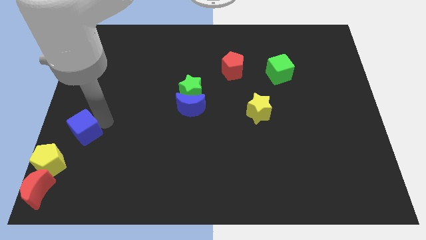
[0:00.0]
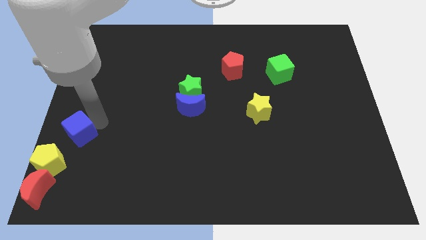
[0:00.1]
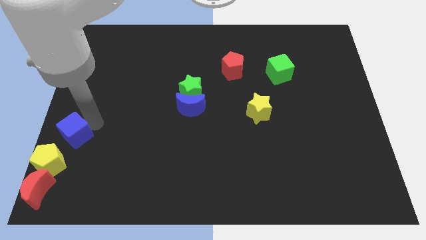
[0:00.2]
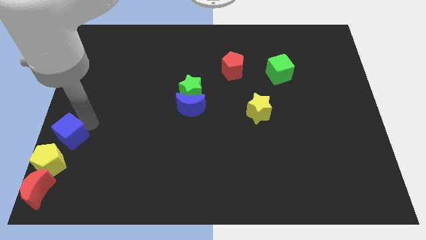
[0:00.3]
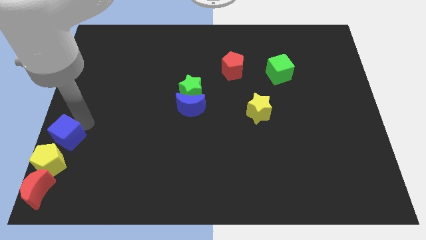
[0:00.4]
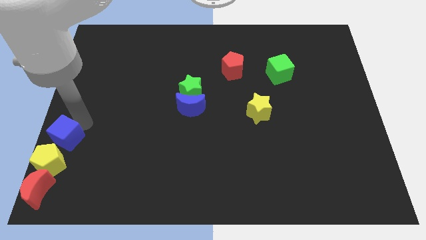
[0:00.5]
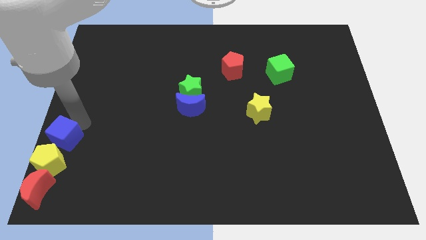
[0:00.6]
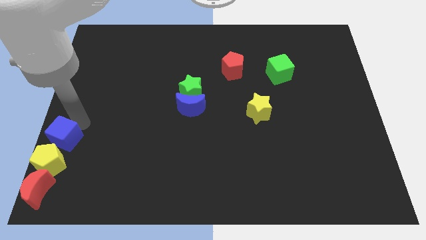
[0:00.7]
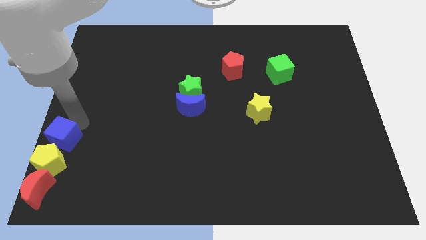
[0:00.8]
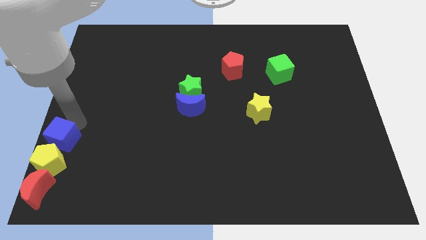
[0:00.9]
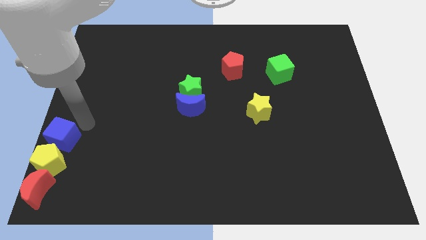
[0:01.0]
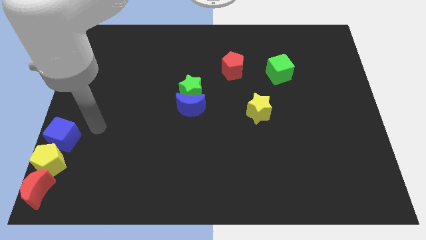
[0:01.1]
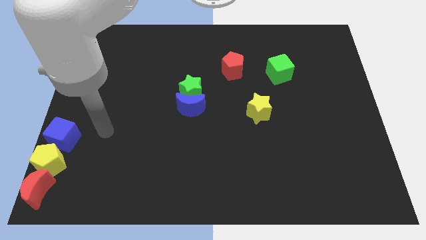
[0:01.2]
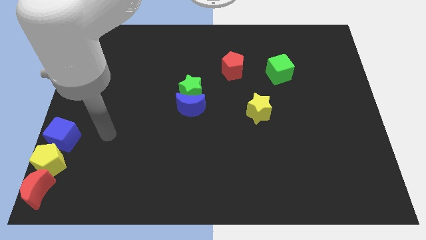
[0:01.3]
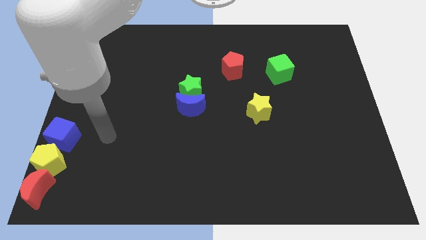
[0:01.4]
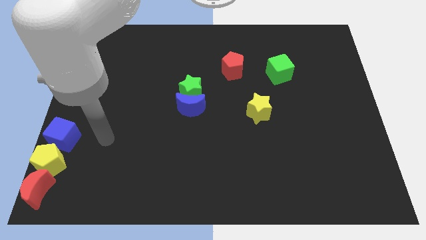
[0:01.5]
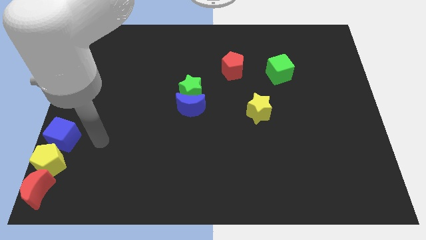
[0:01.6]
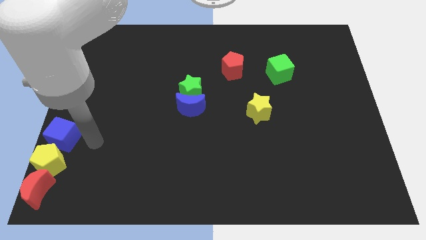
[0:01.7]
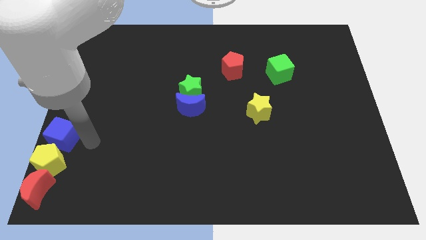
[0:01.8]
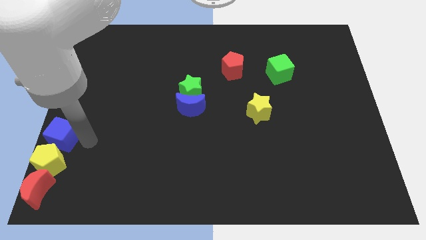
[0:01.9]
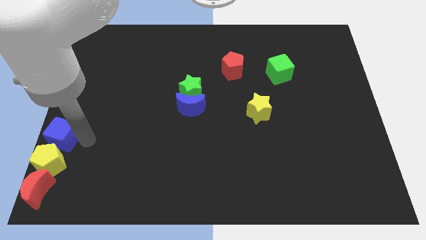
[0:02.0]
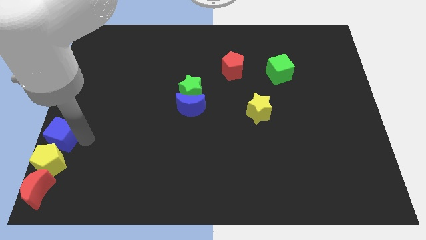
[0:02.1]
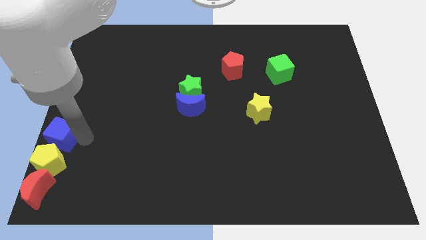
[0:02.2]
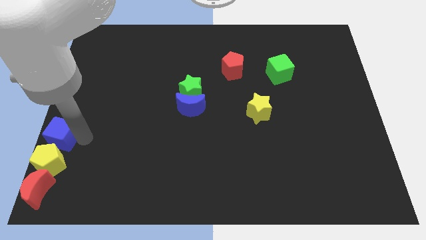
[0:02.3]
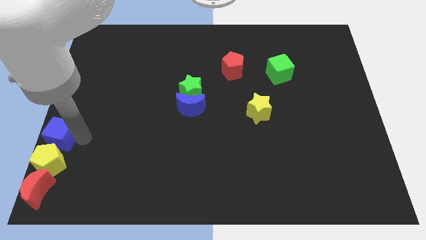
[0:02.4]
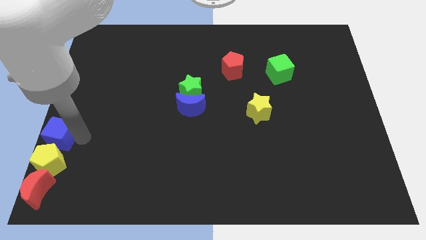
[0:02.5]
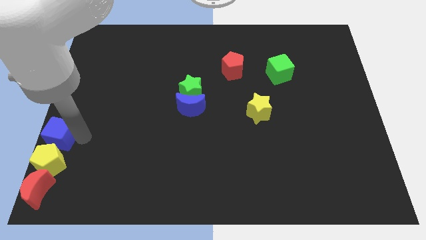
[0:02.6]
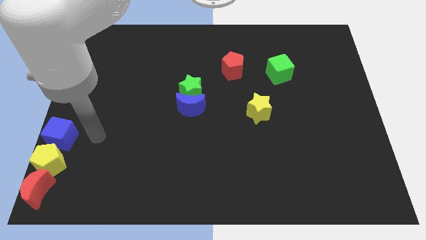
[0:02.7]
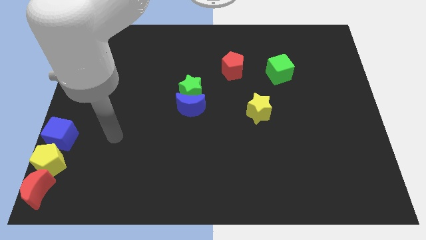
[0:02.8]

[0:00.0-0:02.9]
place the blue cube above to the yellow pentagon at bottom left corner

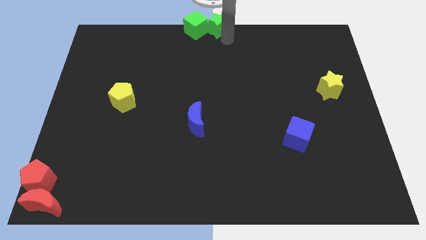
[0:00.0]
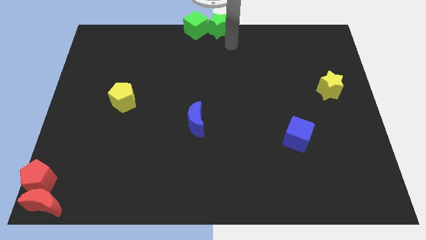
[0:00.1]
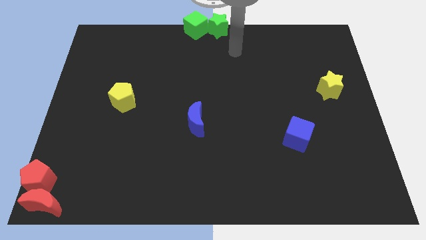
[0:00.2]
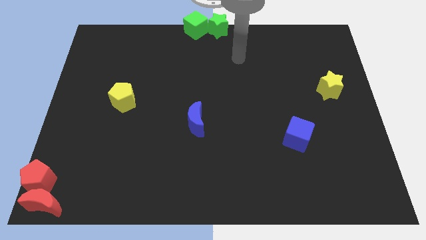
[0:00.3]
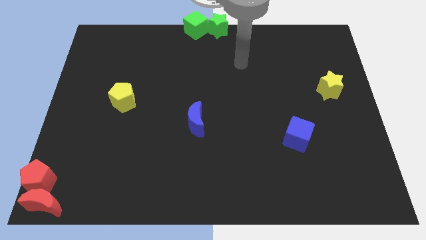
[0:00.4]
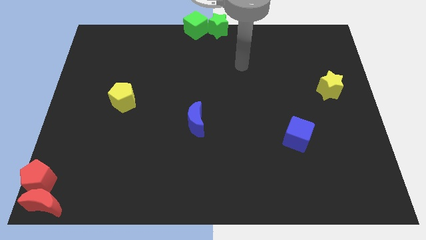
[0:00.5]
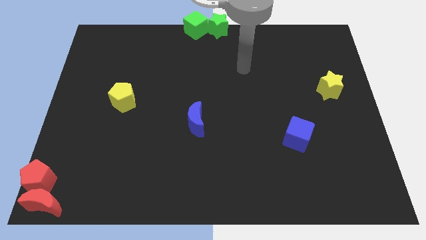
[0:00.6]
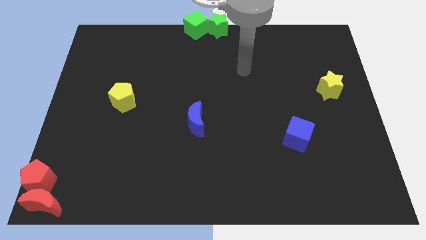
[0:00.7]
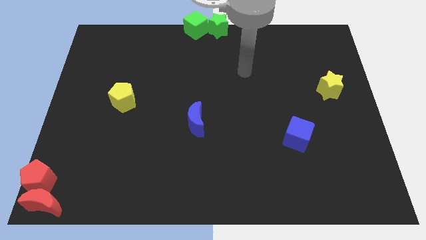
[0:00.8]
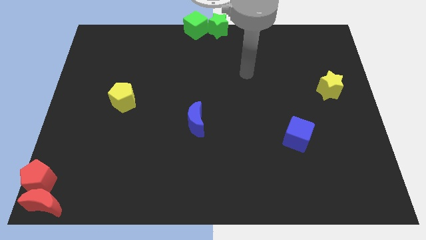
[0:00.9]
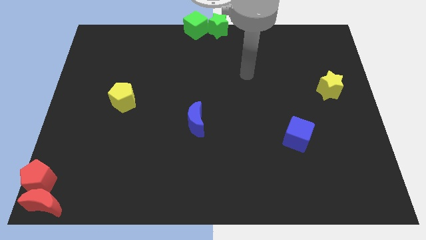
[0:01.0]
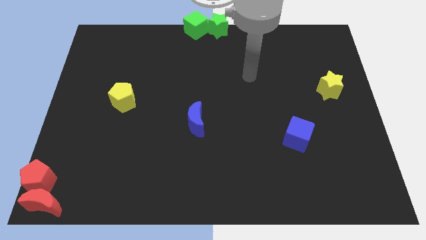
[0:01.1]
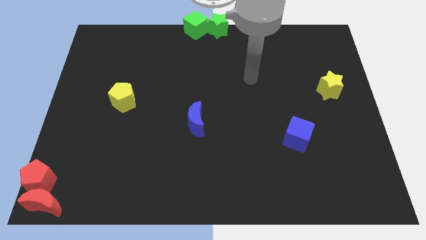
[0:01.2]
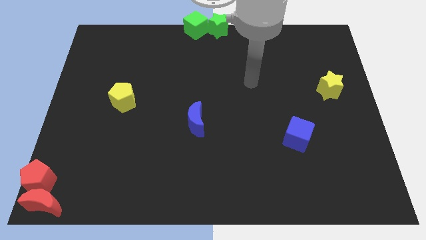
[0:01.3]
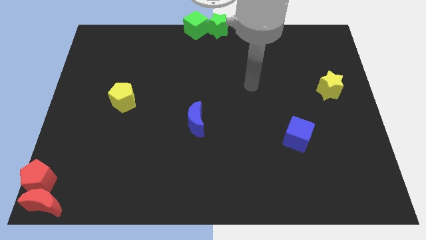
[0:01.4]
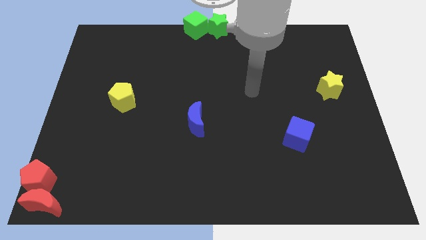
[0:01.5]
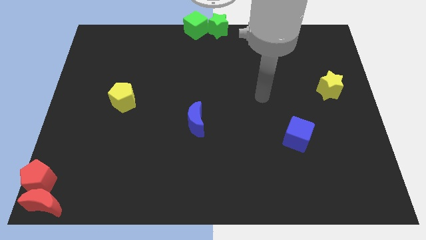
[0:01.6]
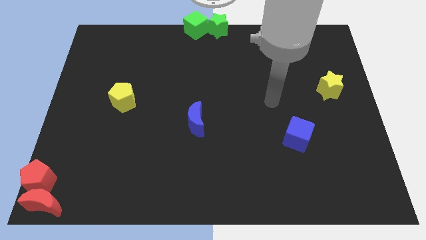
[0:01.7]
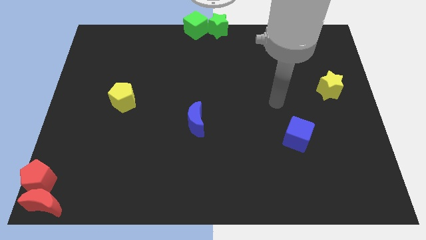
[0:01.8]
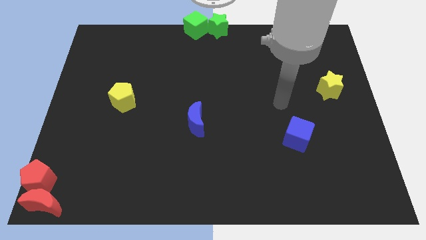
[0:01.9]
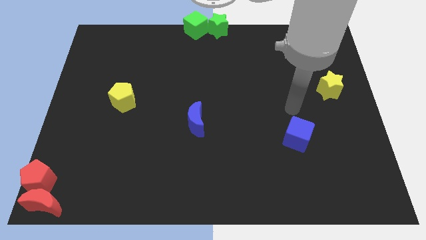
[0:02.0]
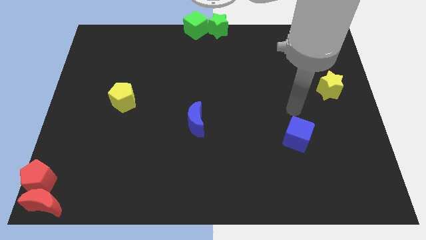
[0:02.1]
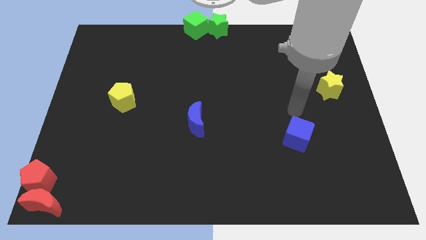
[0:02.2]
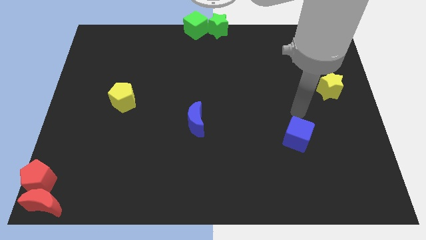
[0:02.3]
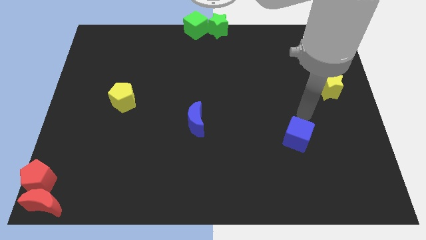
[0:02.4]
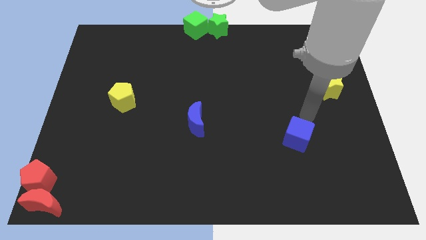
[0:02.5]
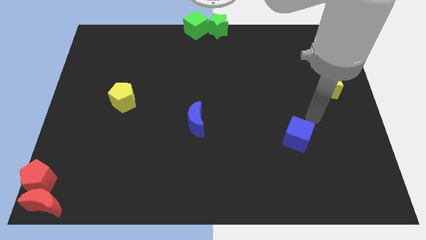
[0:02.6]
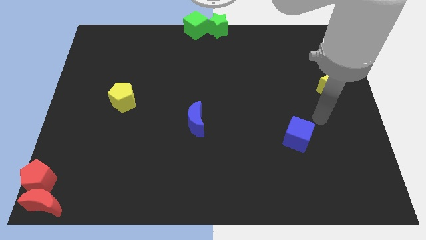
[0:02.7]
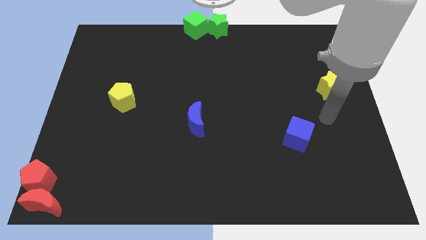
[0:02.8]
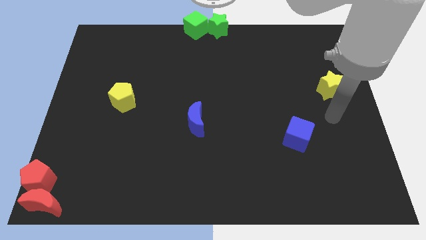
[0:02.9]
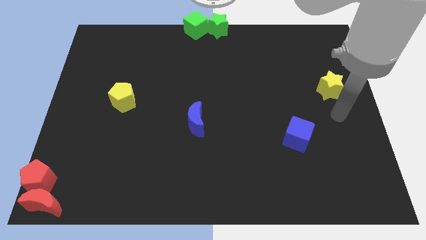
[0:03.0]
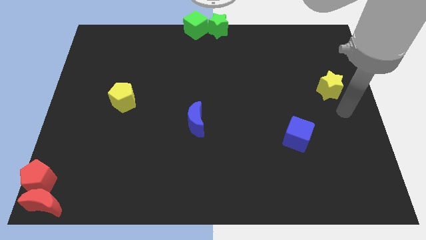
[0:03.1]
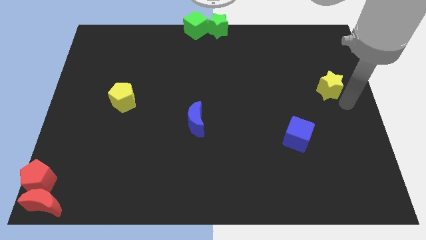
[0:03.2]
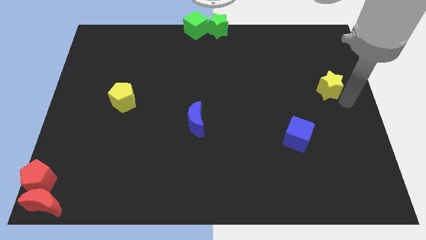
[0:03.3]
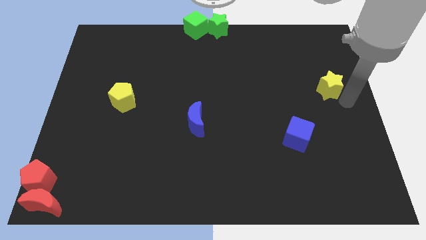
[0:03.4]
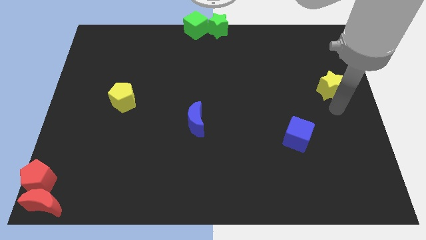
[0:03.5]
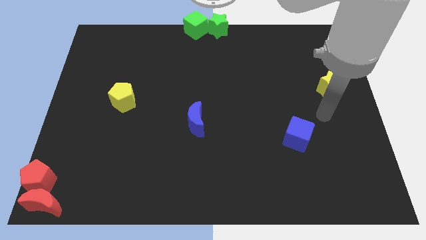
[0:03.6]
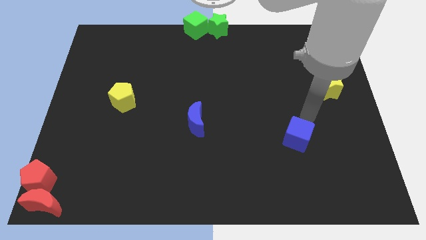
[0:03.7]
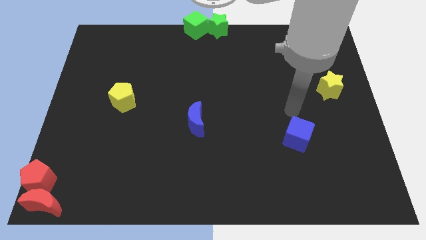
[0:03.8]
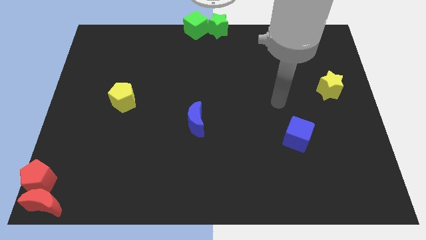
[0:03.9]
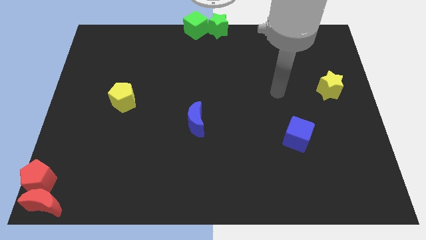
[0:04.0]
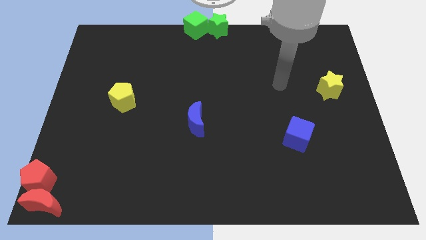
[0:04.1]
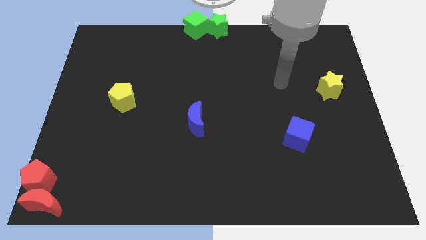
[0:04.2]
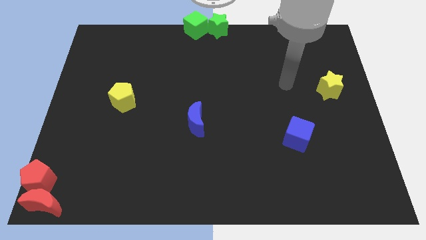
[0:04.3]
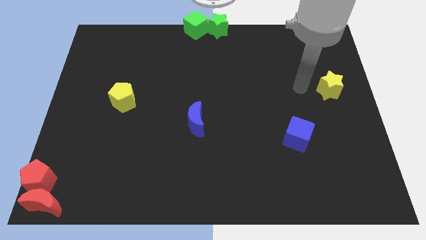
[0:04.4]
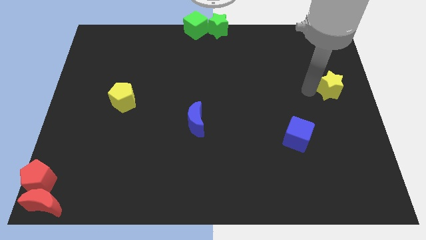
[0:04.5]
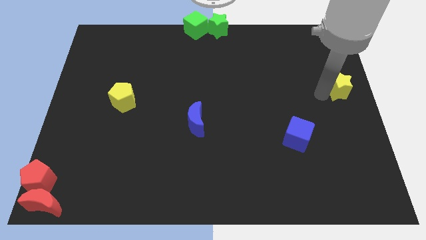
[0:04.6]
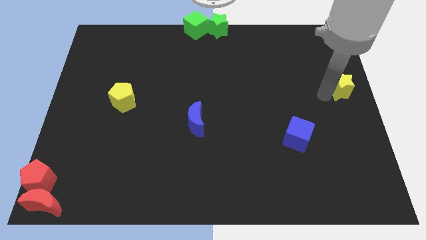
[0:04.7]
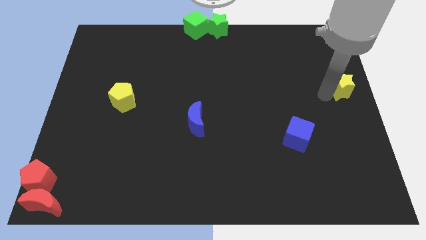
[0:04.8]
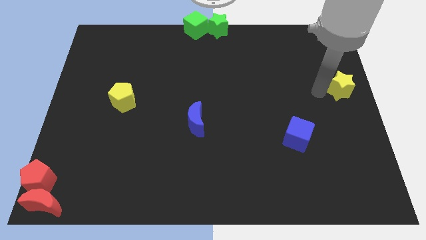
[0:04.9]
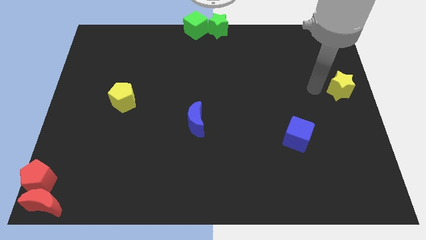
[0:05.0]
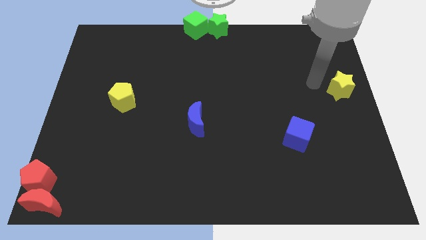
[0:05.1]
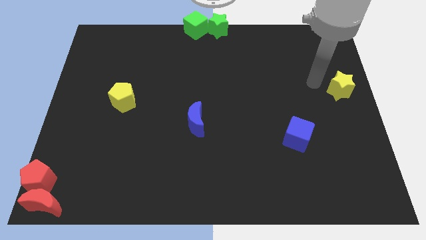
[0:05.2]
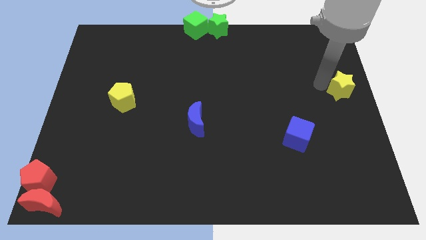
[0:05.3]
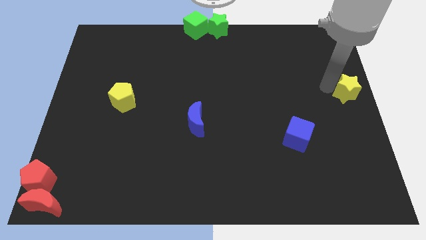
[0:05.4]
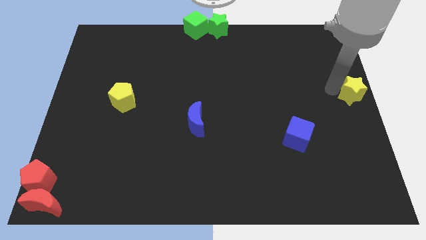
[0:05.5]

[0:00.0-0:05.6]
move the yellow star to the center right

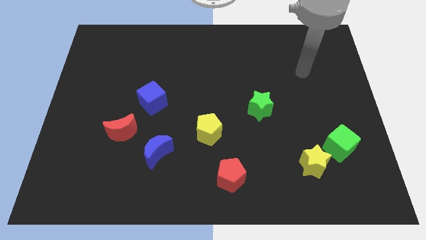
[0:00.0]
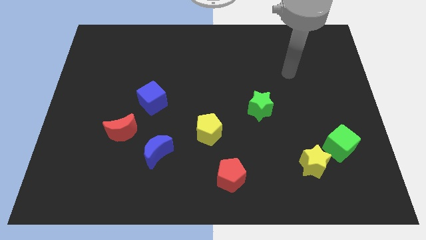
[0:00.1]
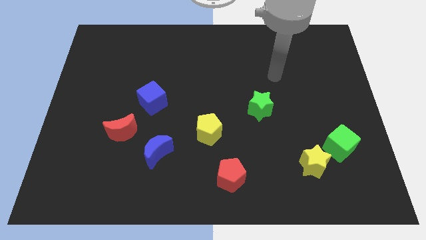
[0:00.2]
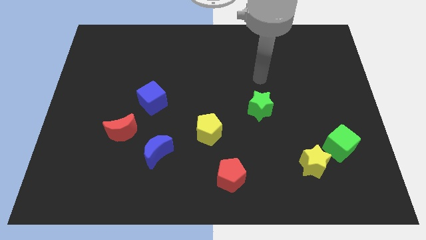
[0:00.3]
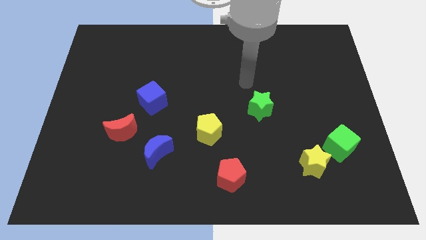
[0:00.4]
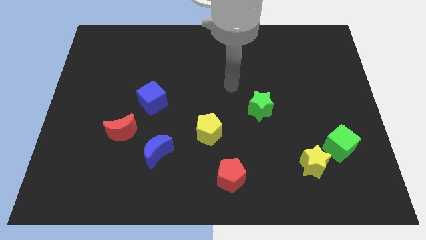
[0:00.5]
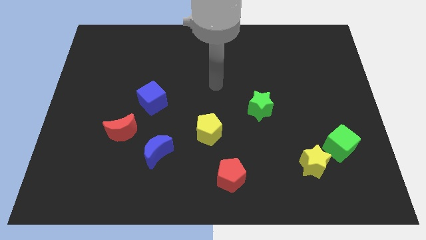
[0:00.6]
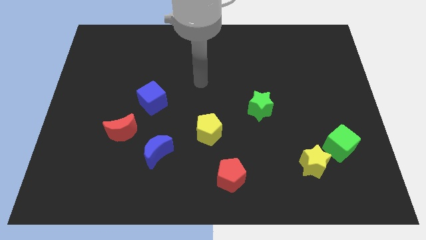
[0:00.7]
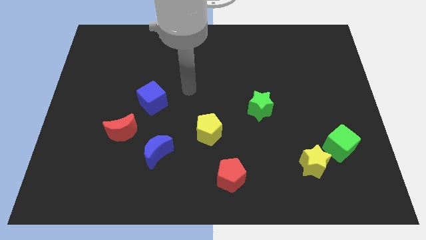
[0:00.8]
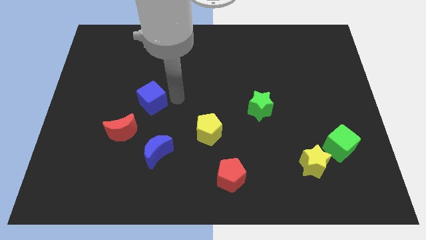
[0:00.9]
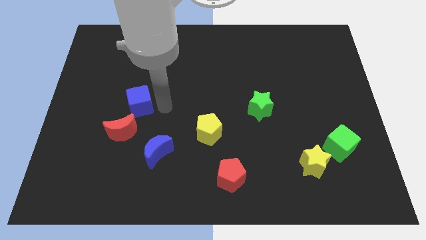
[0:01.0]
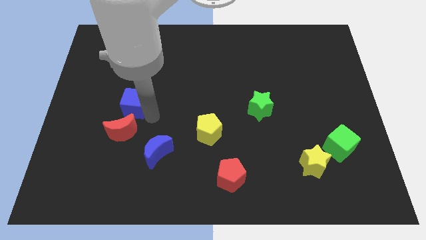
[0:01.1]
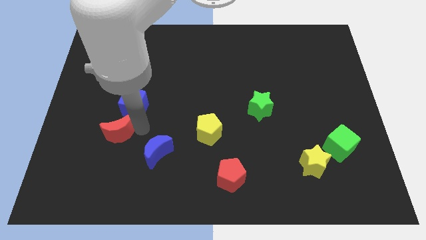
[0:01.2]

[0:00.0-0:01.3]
place blue cube to the top of red moon
